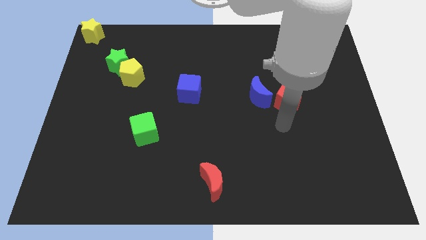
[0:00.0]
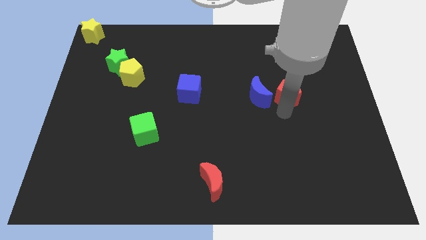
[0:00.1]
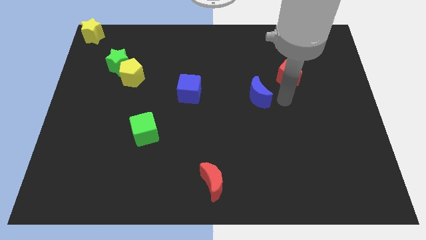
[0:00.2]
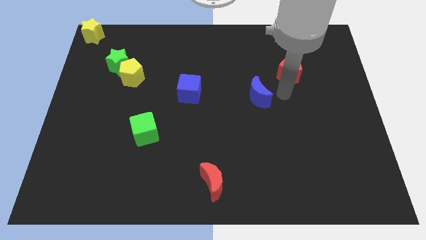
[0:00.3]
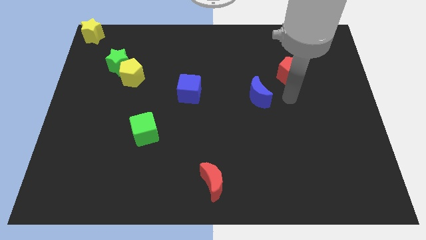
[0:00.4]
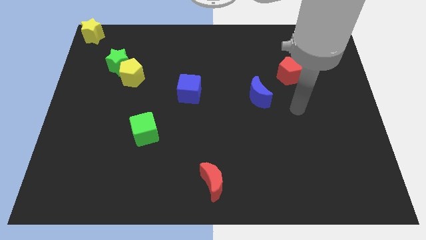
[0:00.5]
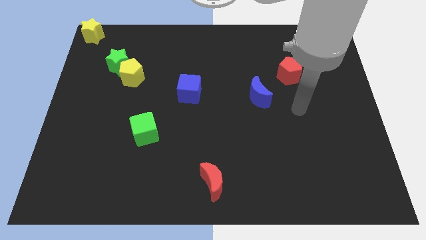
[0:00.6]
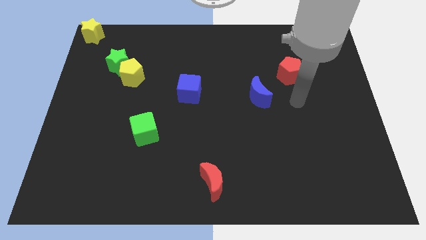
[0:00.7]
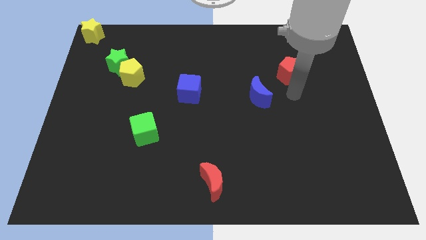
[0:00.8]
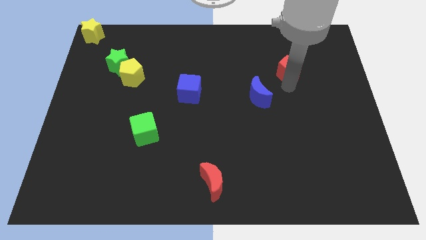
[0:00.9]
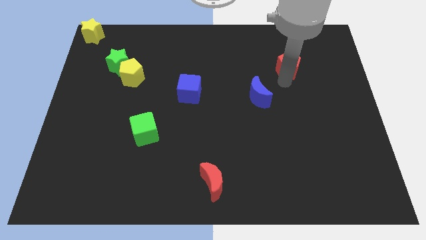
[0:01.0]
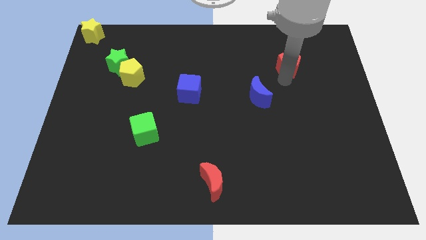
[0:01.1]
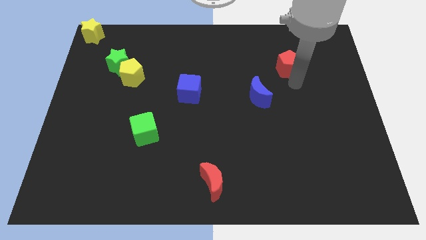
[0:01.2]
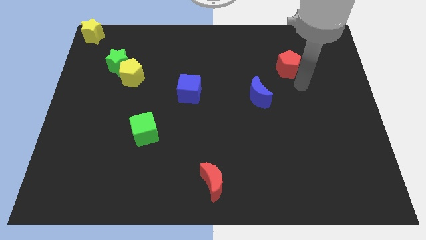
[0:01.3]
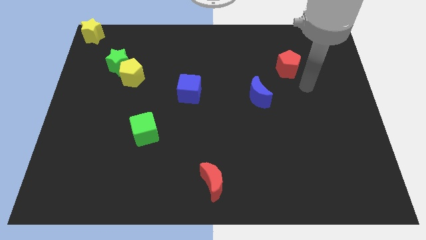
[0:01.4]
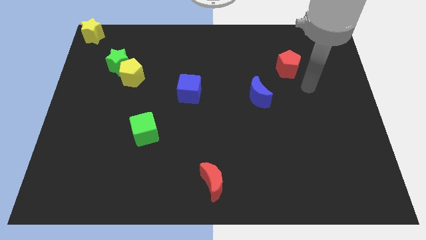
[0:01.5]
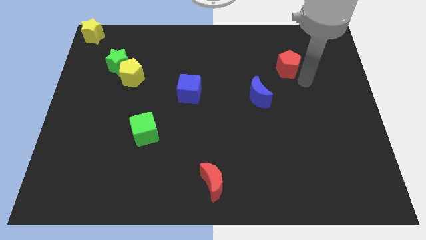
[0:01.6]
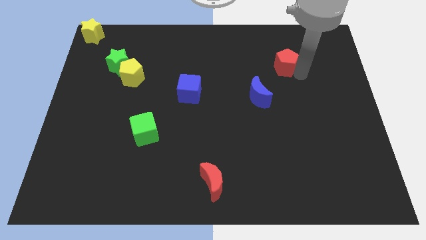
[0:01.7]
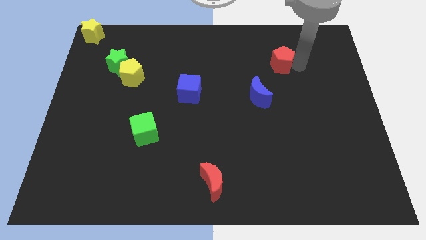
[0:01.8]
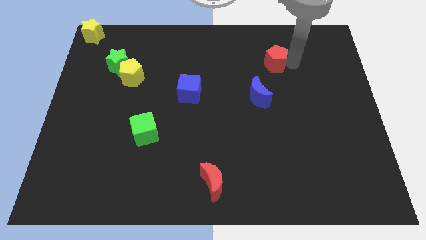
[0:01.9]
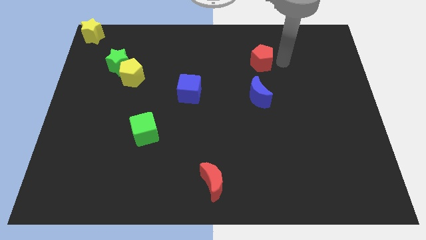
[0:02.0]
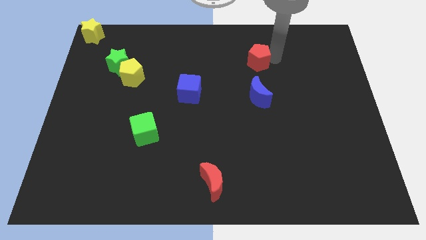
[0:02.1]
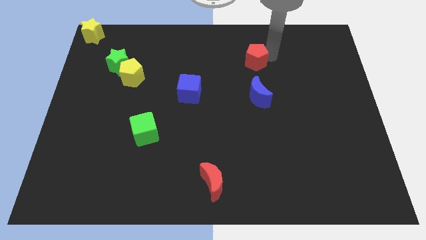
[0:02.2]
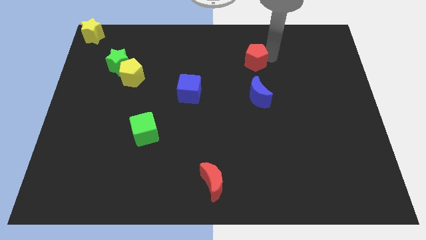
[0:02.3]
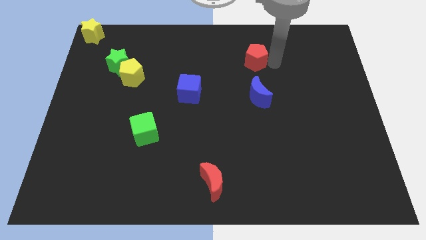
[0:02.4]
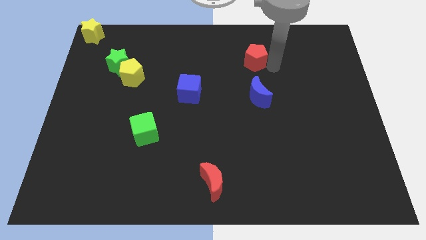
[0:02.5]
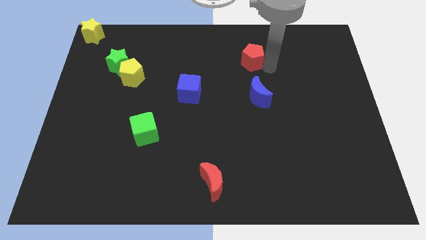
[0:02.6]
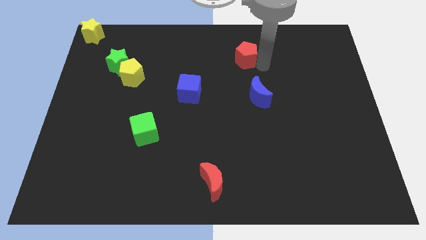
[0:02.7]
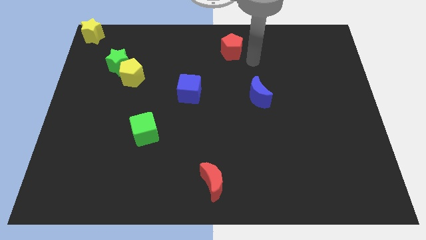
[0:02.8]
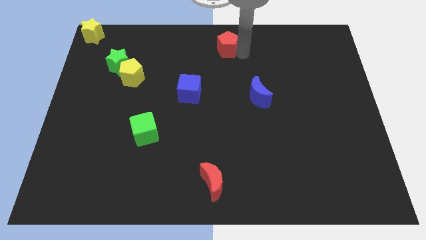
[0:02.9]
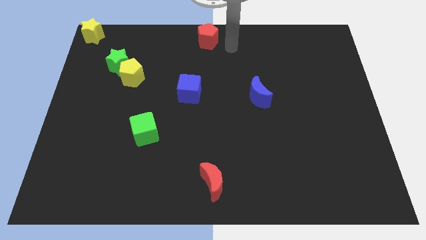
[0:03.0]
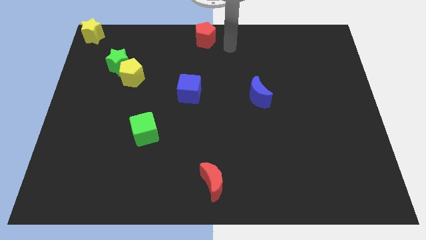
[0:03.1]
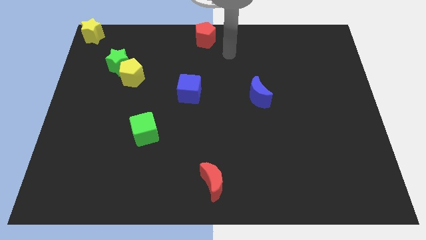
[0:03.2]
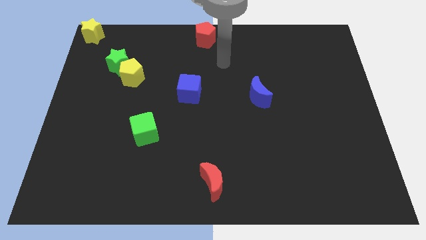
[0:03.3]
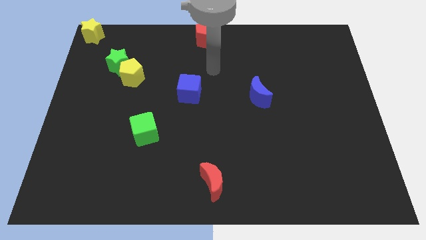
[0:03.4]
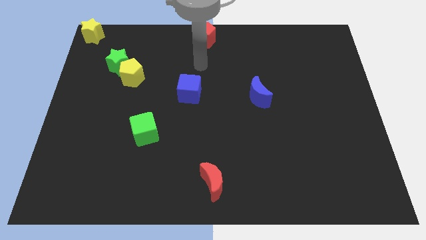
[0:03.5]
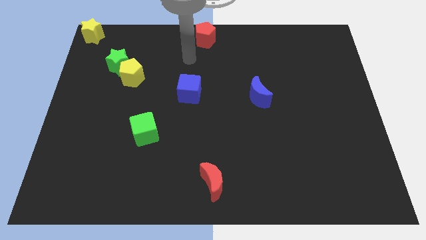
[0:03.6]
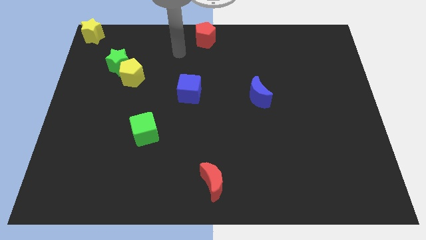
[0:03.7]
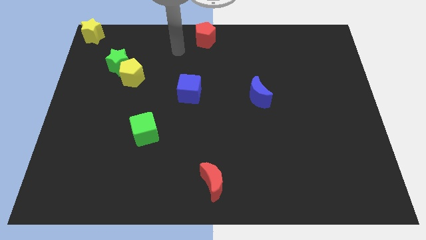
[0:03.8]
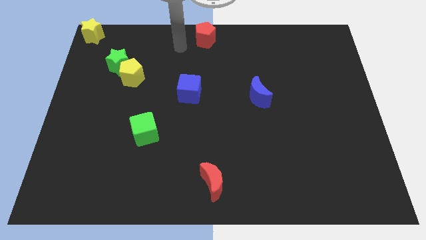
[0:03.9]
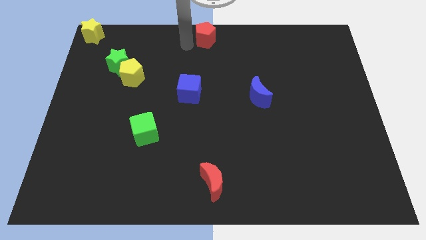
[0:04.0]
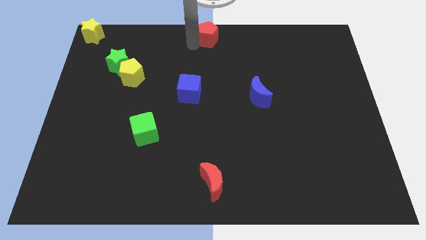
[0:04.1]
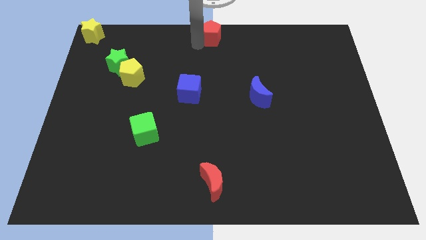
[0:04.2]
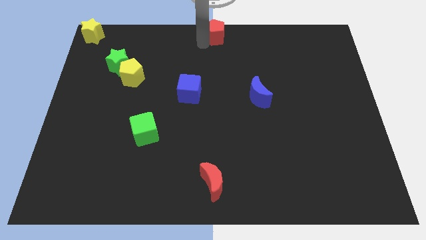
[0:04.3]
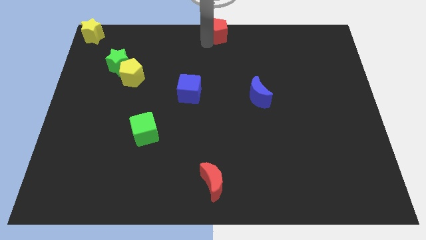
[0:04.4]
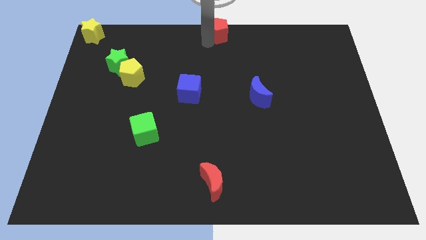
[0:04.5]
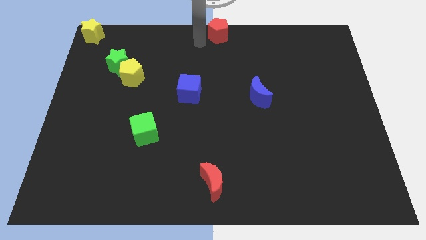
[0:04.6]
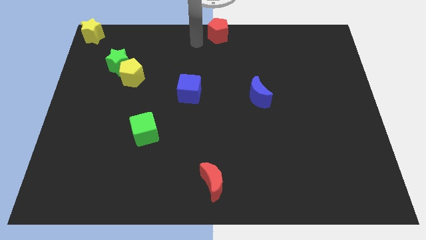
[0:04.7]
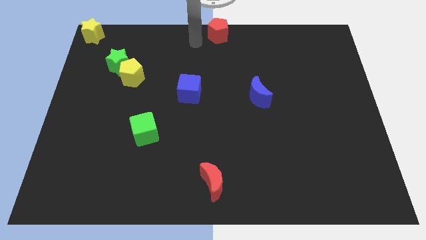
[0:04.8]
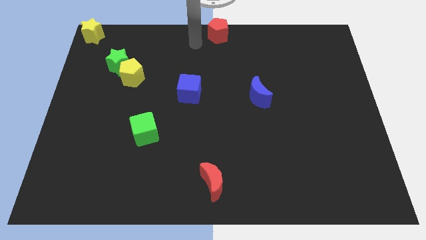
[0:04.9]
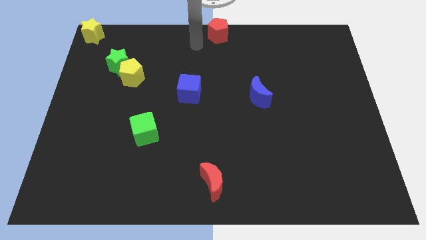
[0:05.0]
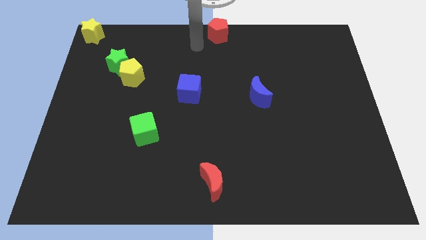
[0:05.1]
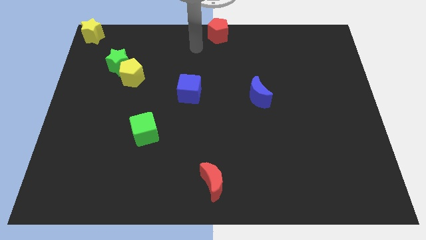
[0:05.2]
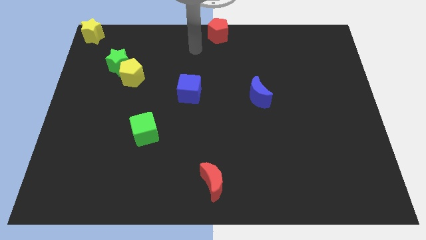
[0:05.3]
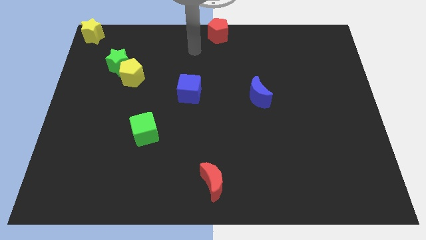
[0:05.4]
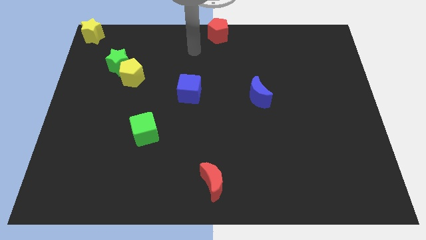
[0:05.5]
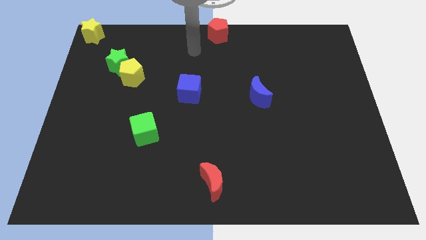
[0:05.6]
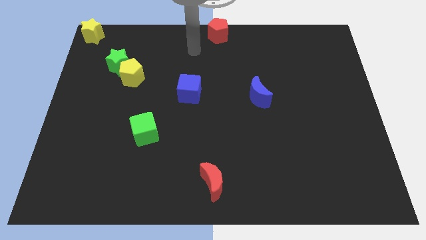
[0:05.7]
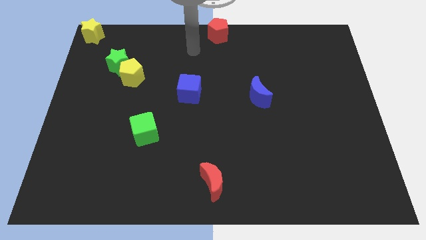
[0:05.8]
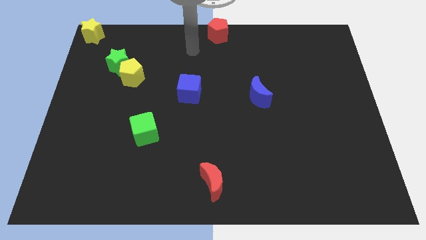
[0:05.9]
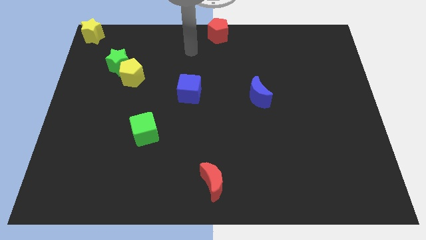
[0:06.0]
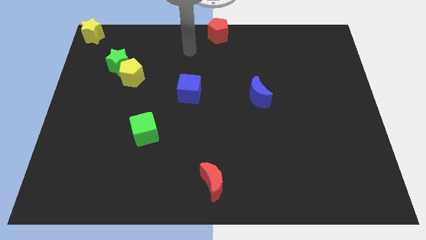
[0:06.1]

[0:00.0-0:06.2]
push the red pentagon towards the top center of the board

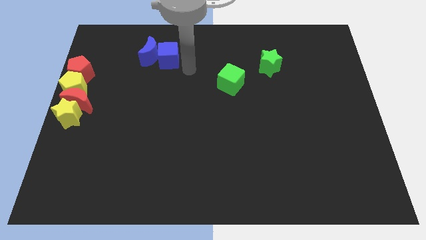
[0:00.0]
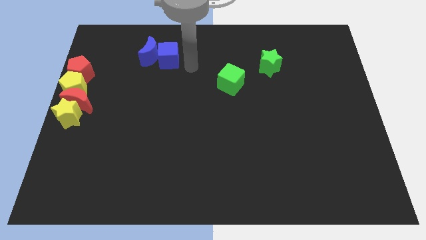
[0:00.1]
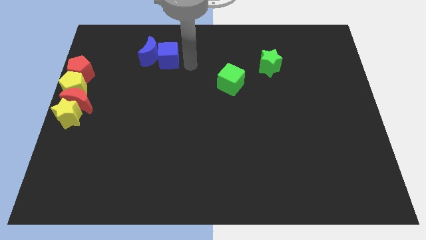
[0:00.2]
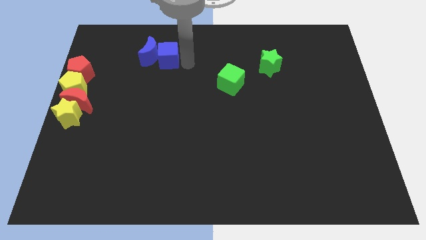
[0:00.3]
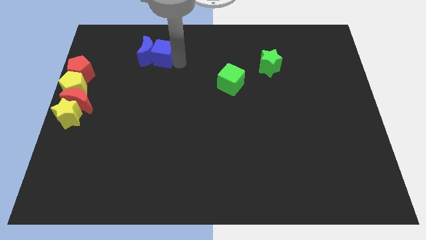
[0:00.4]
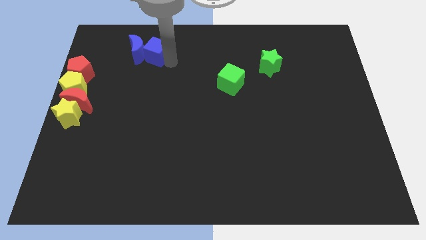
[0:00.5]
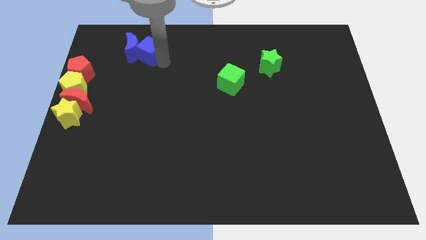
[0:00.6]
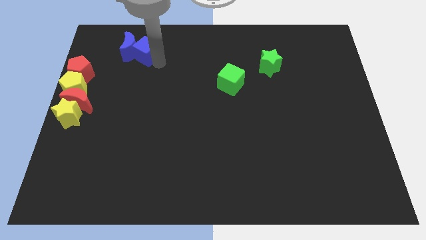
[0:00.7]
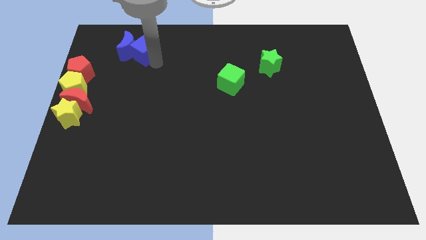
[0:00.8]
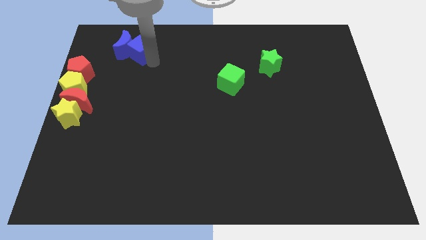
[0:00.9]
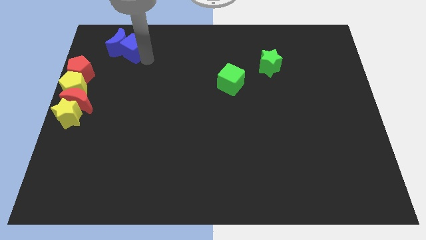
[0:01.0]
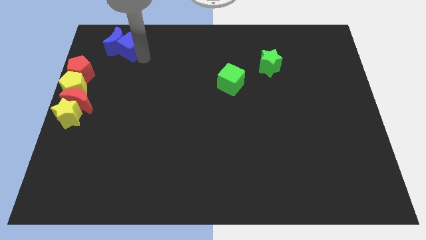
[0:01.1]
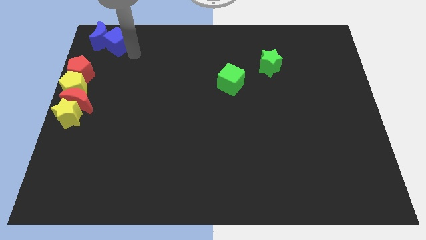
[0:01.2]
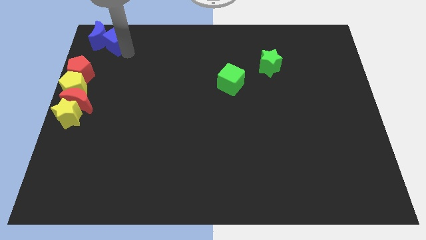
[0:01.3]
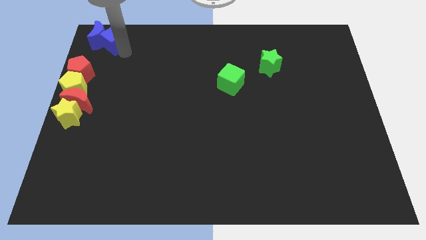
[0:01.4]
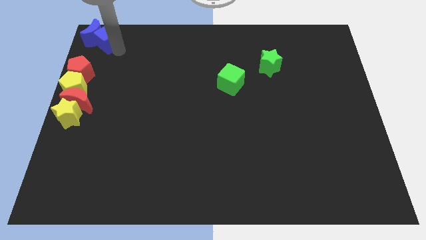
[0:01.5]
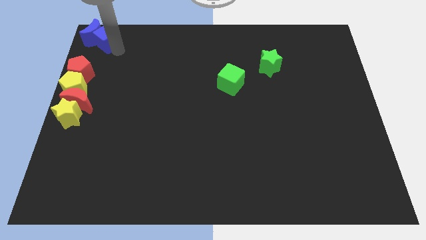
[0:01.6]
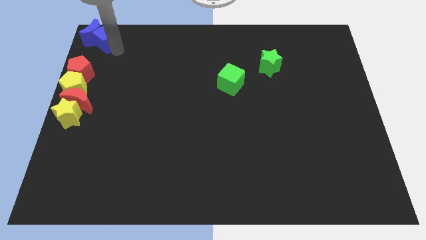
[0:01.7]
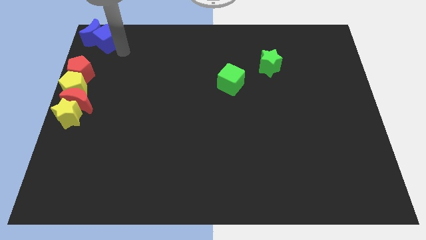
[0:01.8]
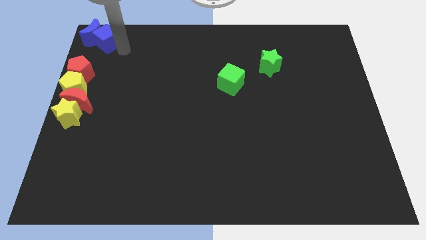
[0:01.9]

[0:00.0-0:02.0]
move blue cube along with blue crescent to the left top corner

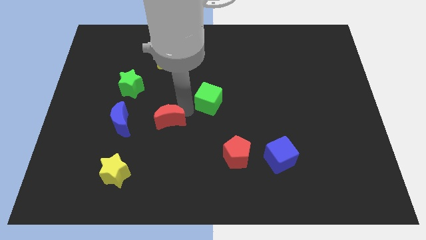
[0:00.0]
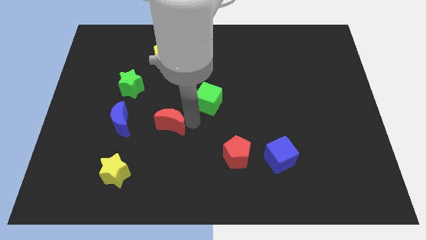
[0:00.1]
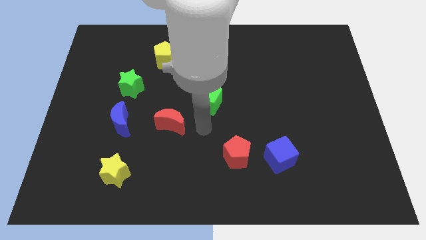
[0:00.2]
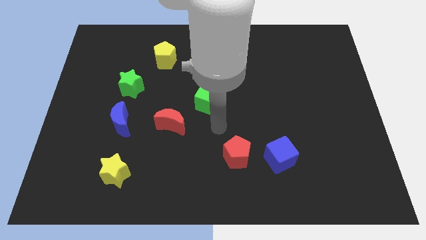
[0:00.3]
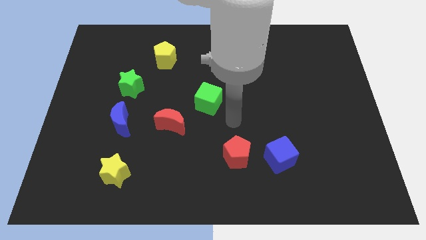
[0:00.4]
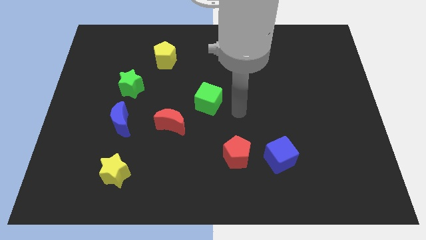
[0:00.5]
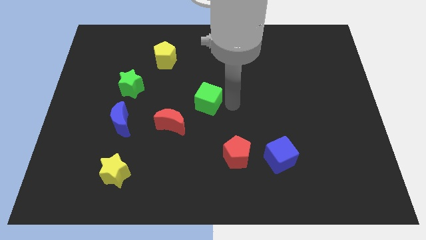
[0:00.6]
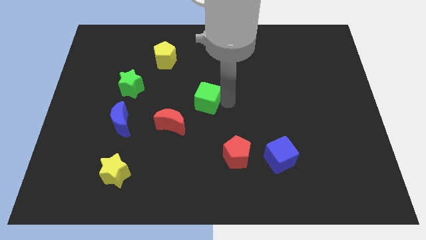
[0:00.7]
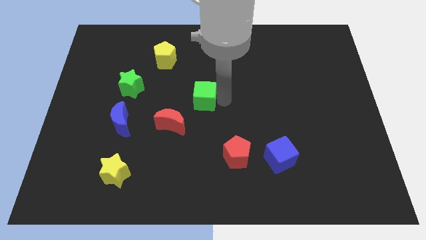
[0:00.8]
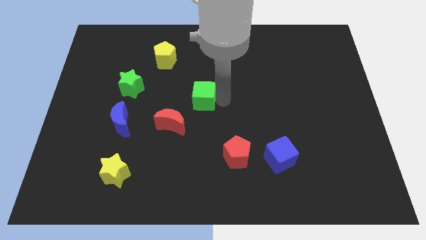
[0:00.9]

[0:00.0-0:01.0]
move arm near green cube
